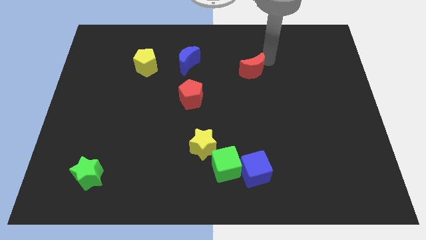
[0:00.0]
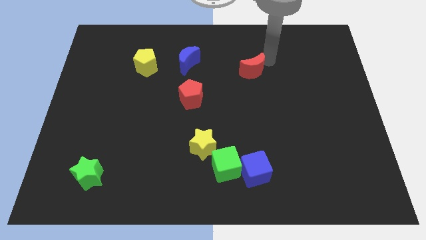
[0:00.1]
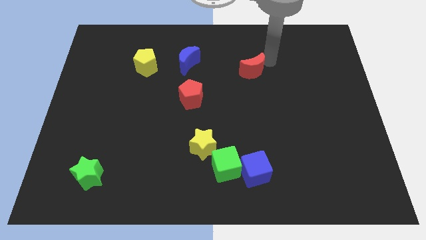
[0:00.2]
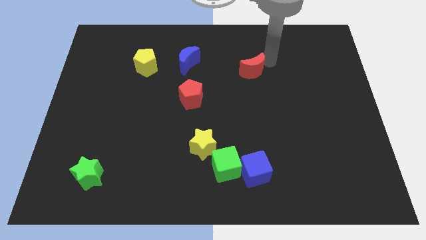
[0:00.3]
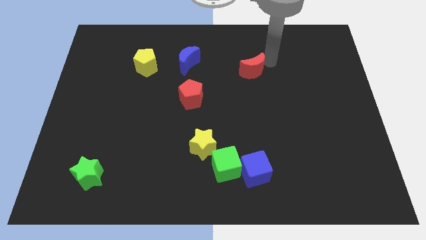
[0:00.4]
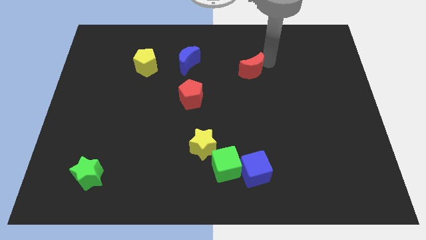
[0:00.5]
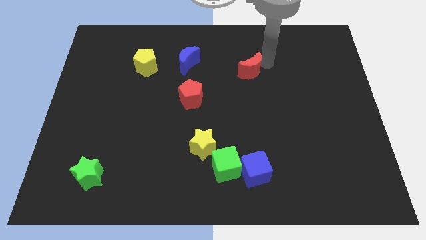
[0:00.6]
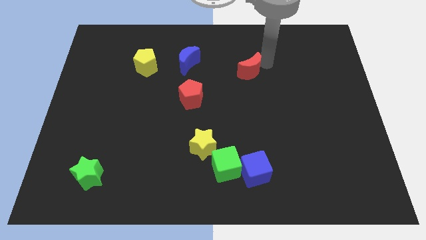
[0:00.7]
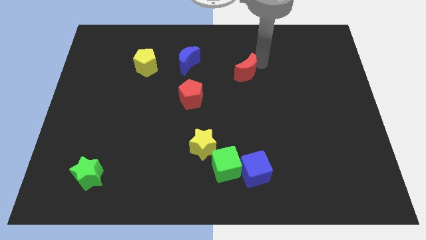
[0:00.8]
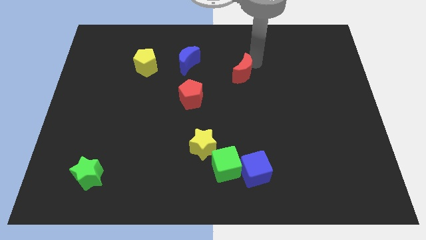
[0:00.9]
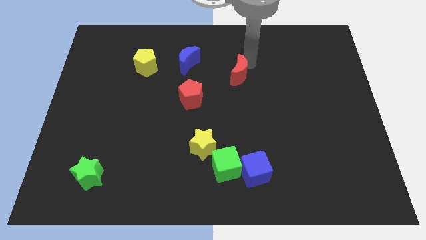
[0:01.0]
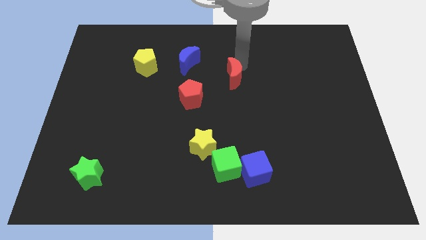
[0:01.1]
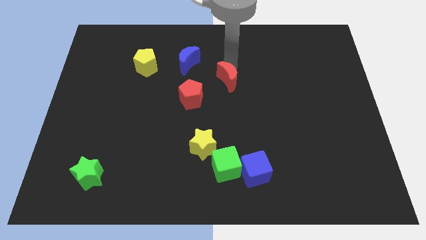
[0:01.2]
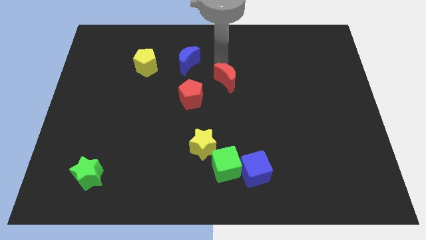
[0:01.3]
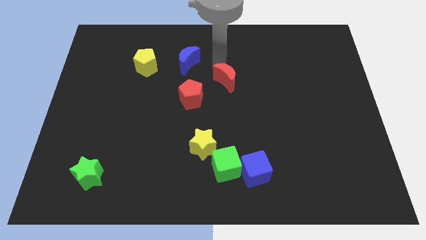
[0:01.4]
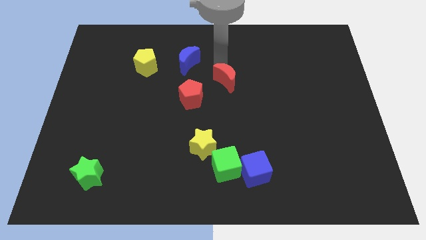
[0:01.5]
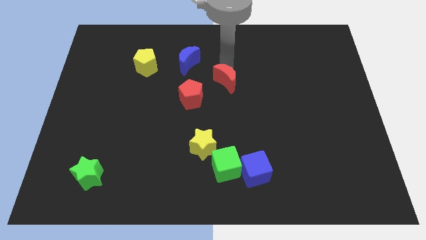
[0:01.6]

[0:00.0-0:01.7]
push the red crescent

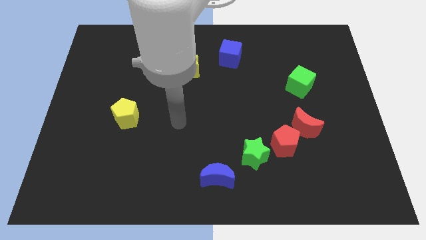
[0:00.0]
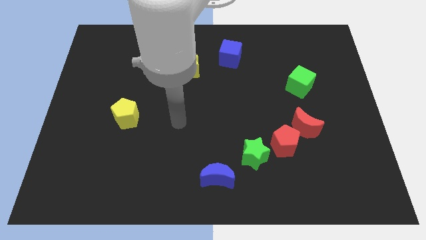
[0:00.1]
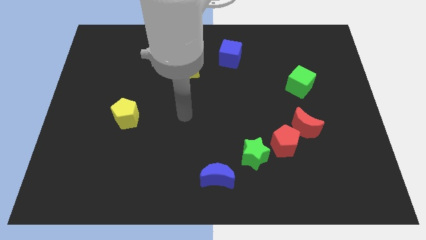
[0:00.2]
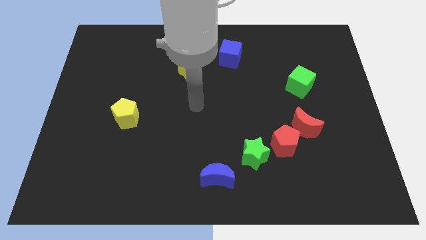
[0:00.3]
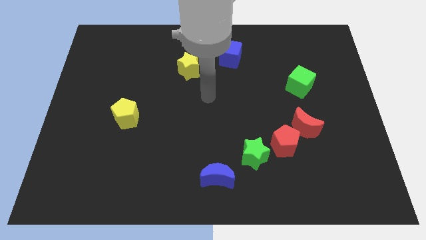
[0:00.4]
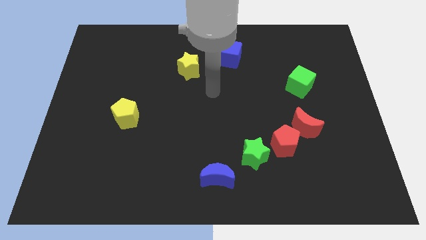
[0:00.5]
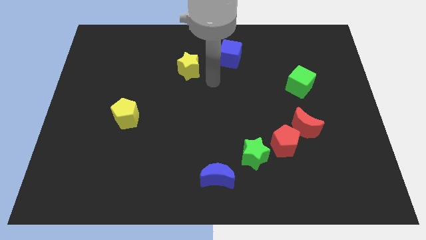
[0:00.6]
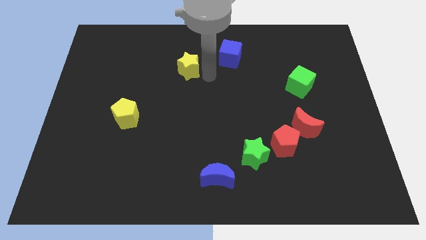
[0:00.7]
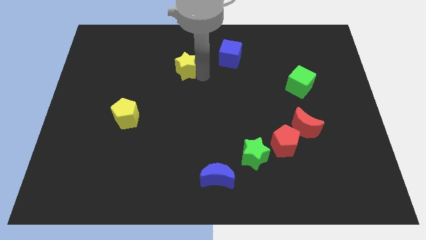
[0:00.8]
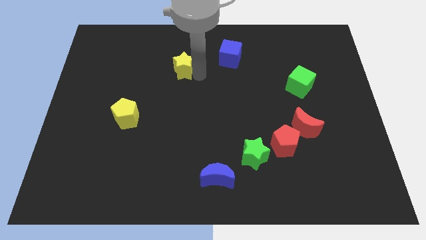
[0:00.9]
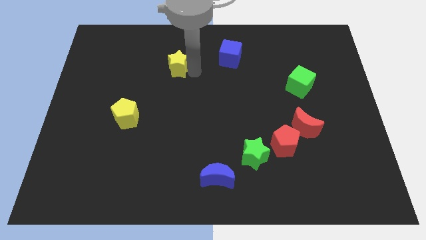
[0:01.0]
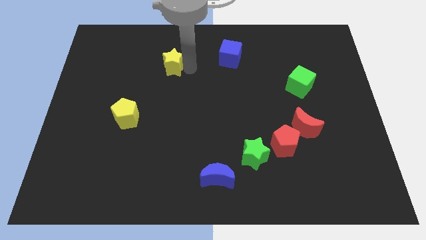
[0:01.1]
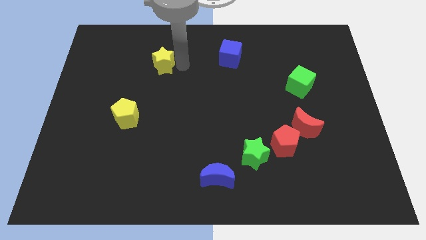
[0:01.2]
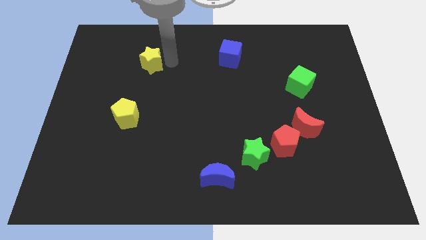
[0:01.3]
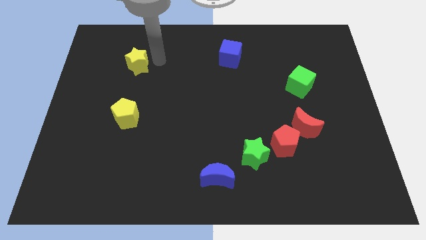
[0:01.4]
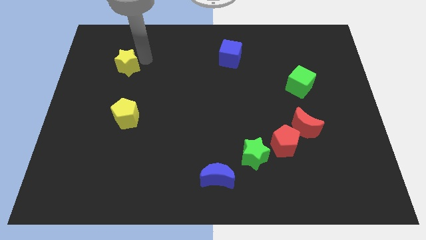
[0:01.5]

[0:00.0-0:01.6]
push the yellow star towards the left side of the board

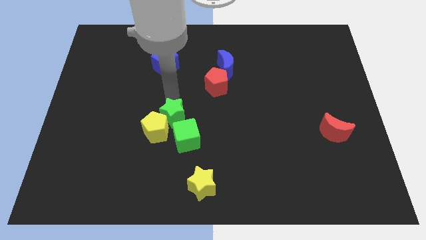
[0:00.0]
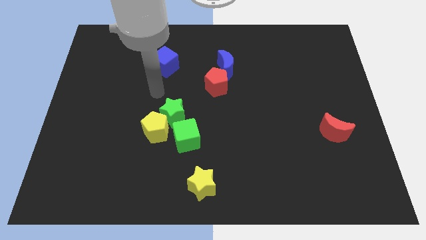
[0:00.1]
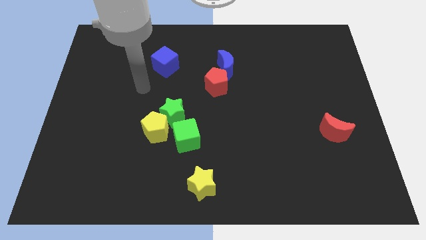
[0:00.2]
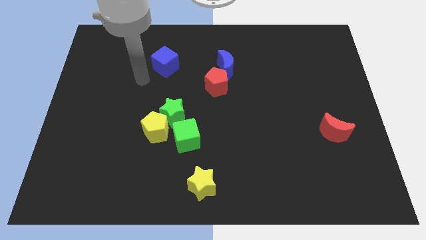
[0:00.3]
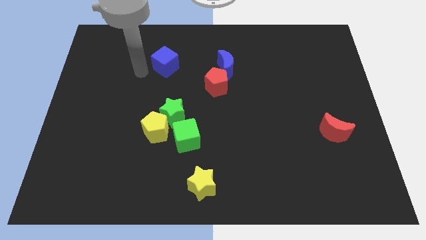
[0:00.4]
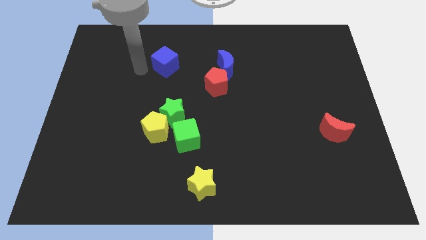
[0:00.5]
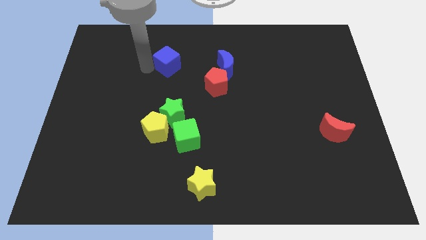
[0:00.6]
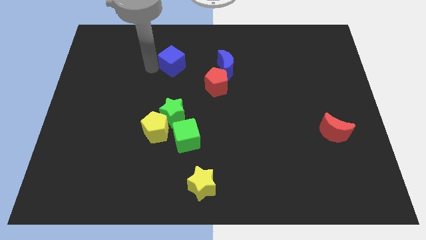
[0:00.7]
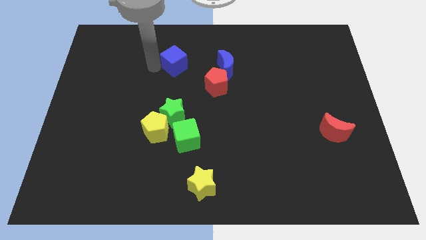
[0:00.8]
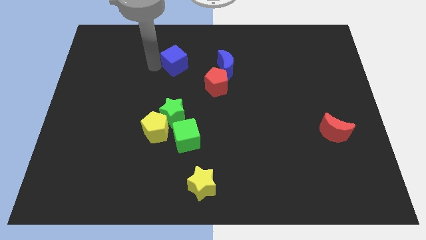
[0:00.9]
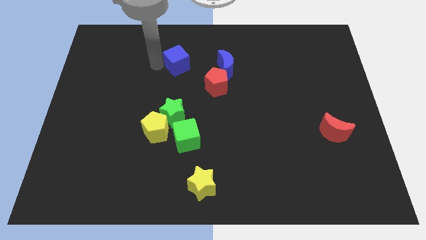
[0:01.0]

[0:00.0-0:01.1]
tap your arm to the left side of blue cube

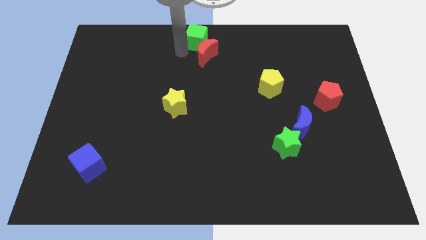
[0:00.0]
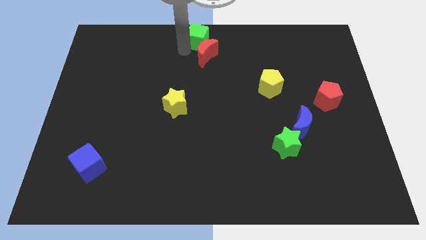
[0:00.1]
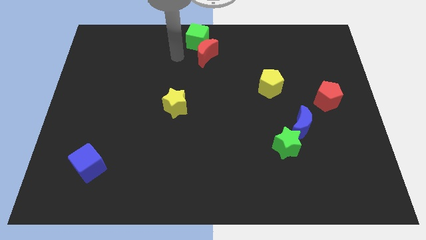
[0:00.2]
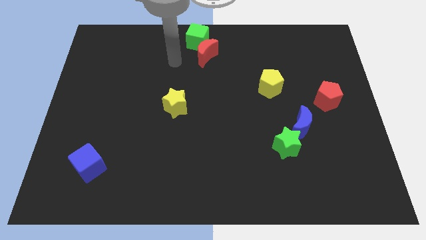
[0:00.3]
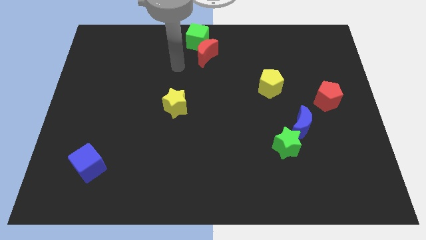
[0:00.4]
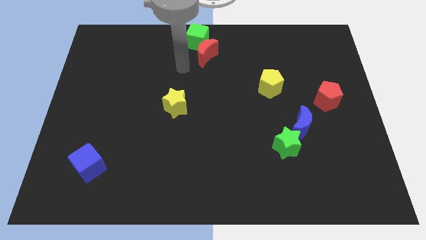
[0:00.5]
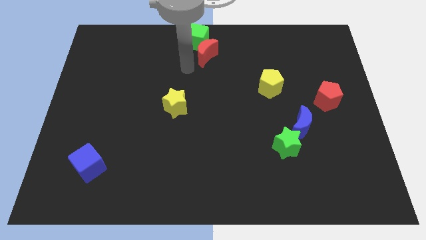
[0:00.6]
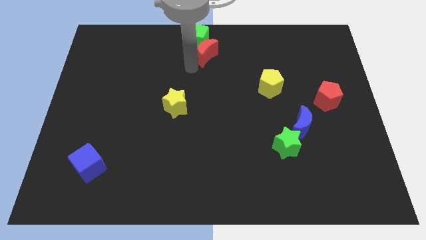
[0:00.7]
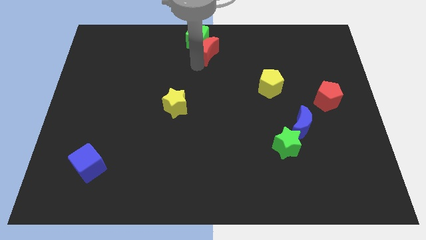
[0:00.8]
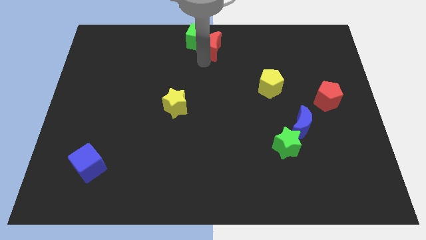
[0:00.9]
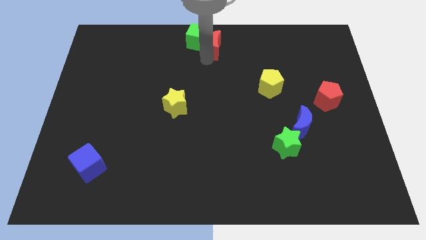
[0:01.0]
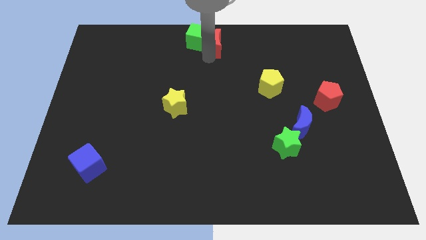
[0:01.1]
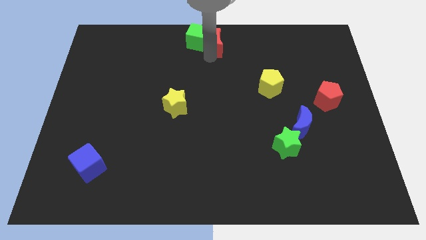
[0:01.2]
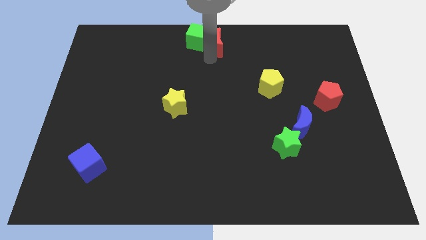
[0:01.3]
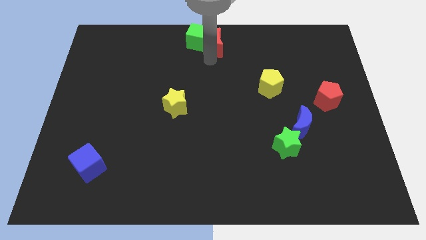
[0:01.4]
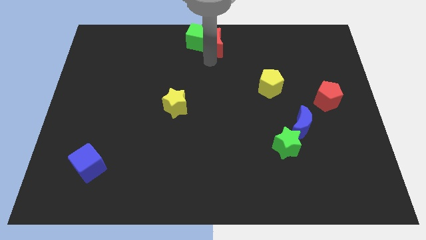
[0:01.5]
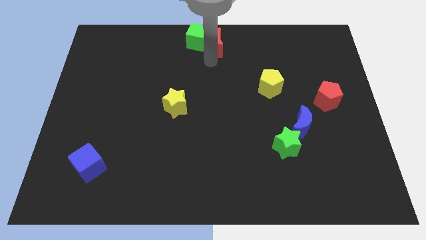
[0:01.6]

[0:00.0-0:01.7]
place red moon to the right of green cube

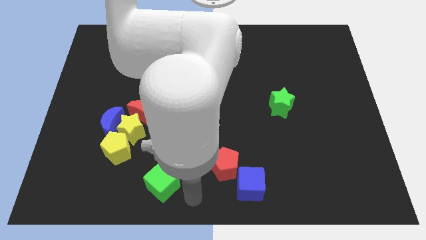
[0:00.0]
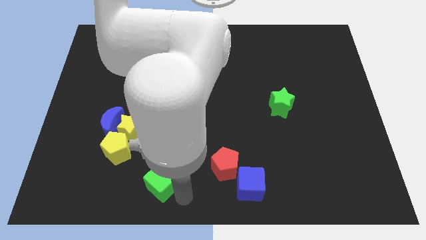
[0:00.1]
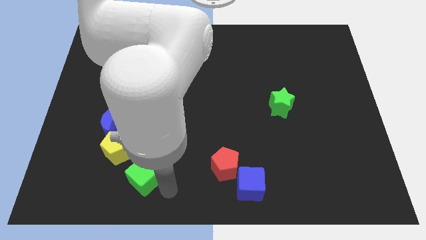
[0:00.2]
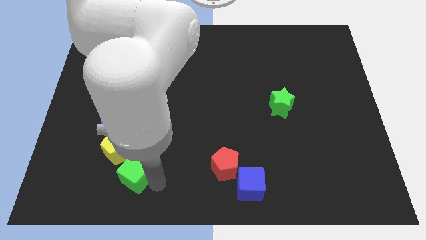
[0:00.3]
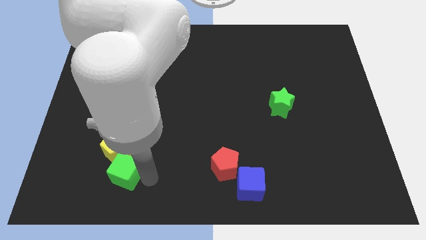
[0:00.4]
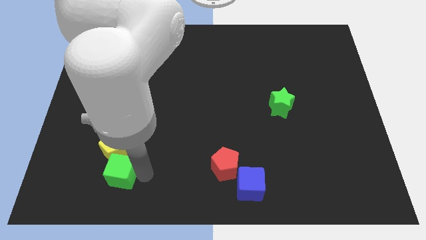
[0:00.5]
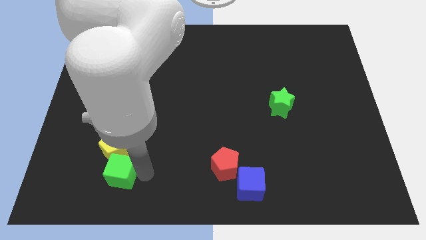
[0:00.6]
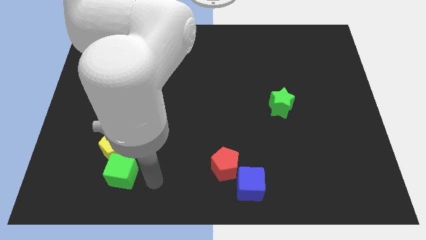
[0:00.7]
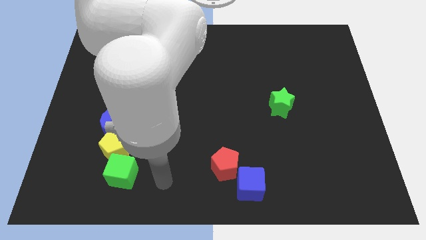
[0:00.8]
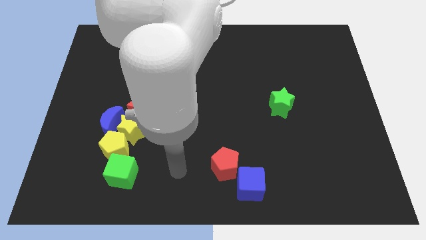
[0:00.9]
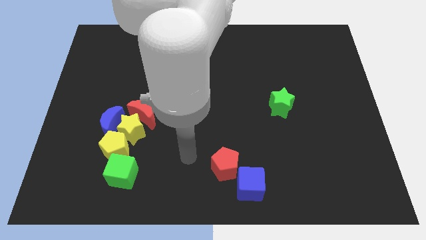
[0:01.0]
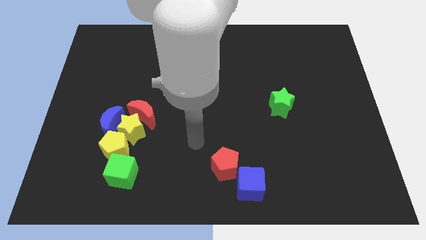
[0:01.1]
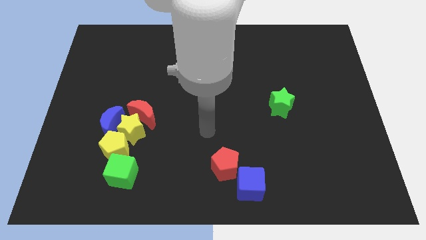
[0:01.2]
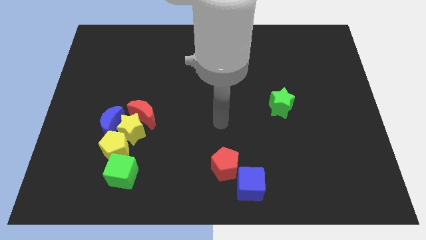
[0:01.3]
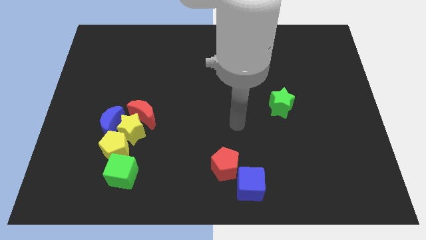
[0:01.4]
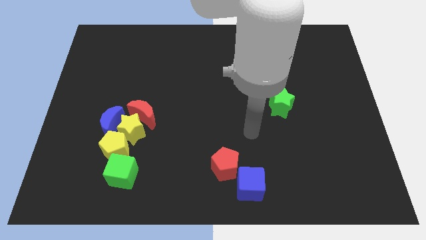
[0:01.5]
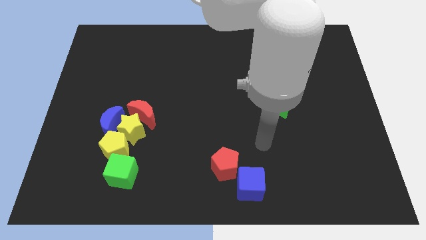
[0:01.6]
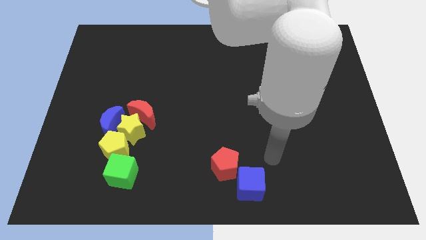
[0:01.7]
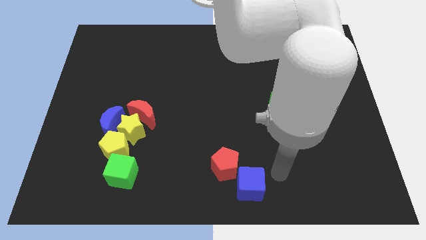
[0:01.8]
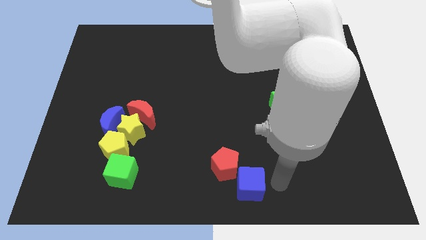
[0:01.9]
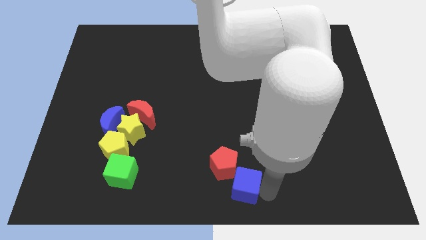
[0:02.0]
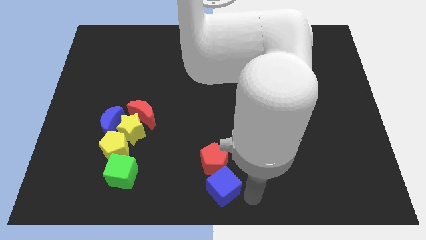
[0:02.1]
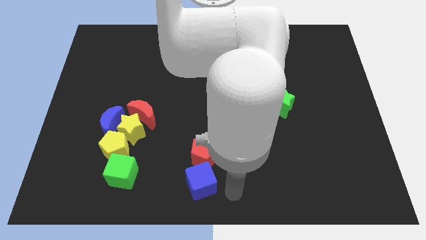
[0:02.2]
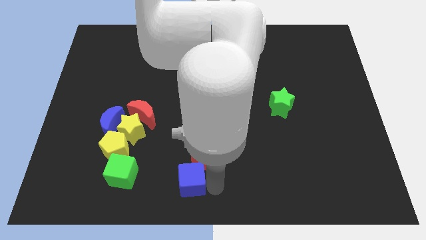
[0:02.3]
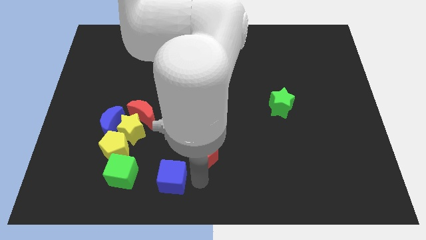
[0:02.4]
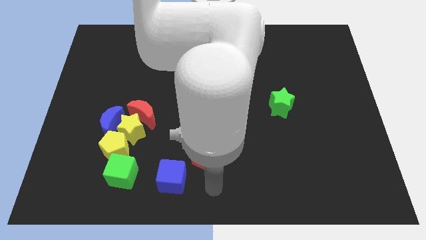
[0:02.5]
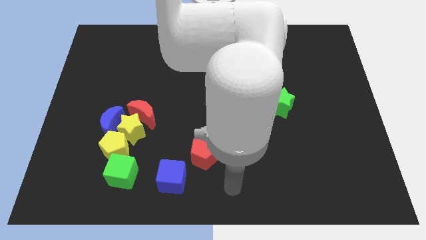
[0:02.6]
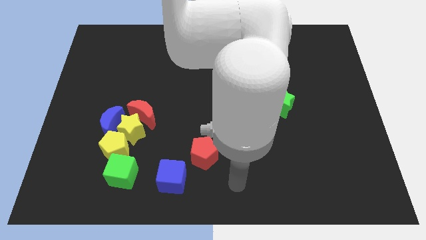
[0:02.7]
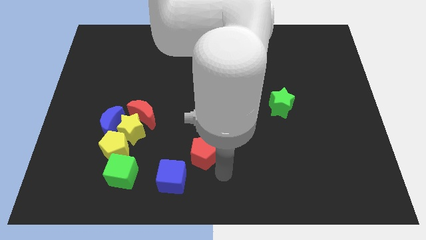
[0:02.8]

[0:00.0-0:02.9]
move the blue cube to the right of the green cube
